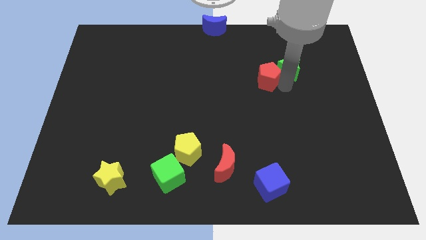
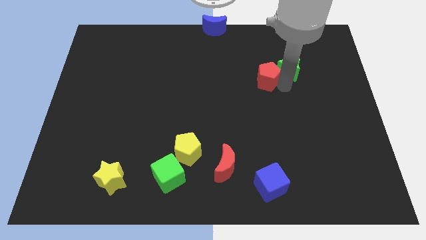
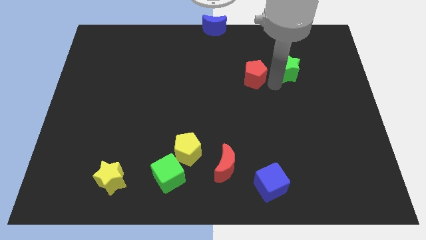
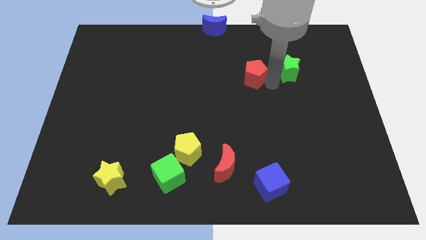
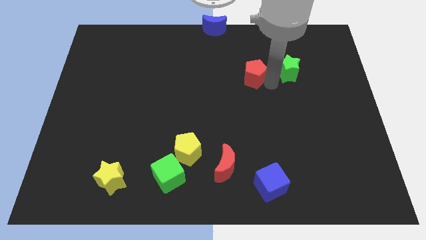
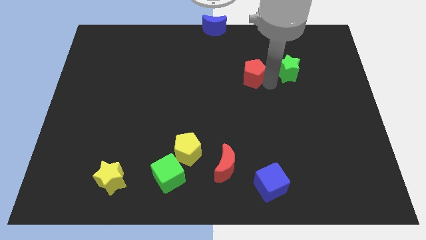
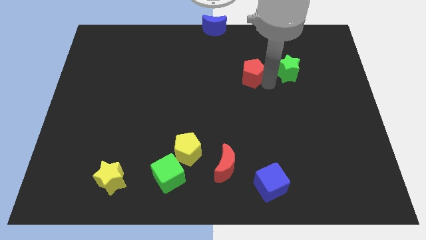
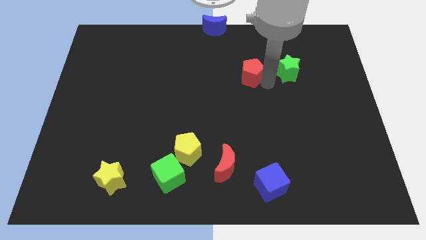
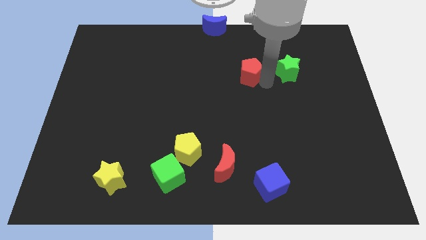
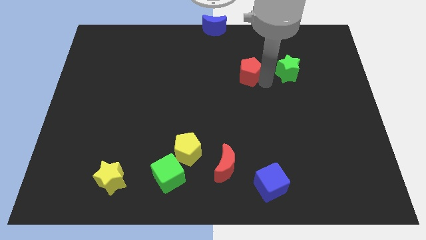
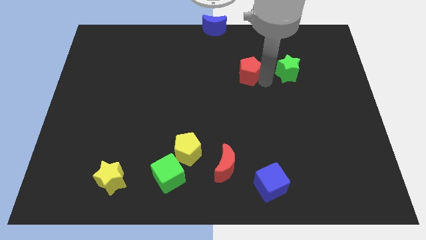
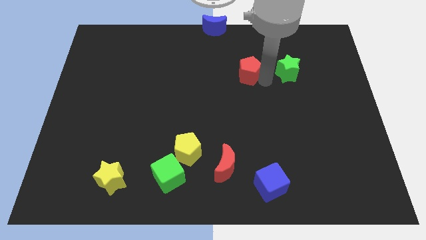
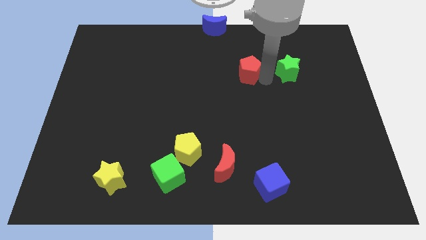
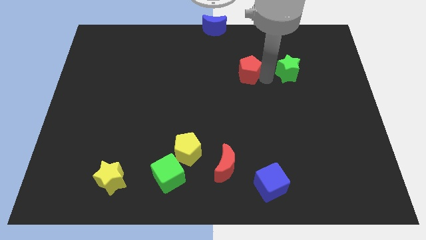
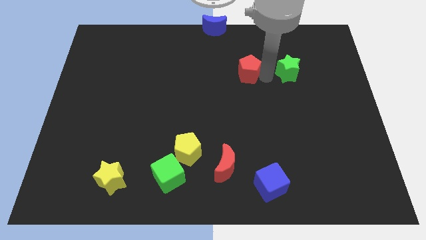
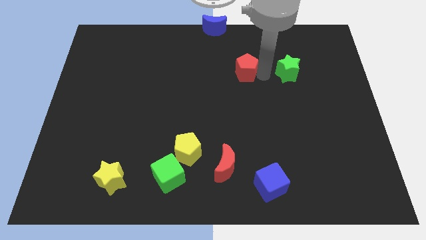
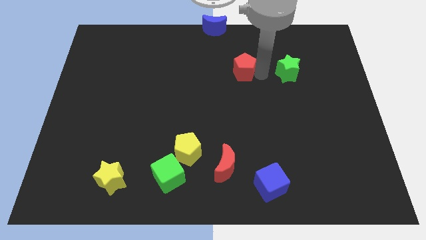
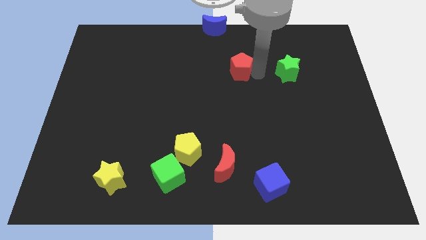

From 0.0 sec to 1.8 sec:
move red pentagon towards center

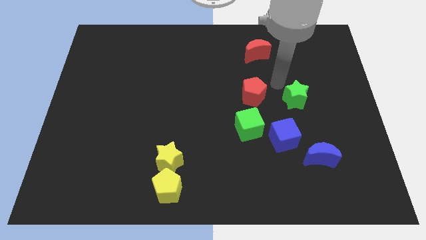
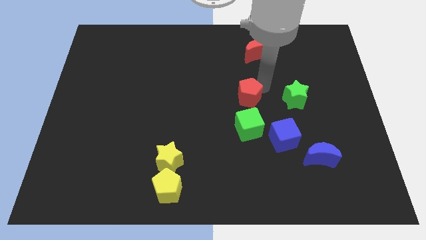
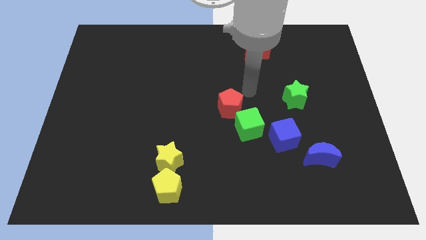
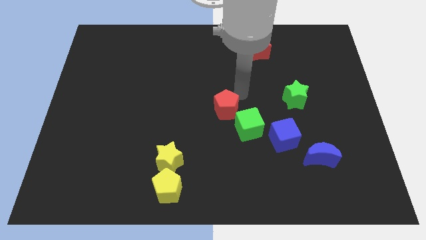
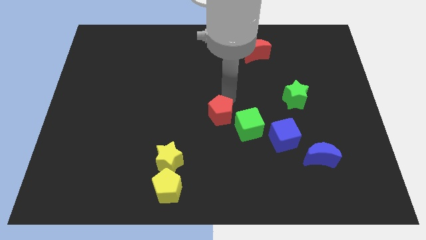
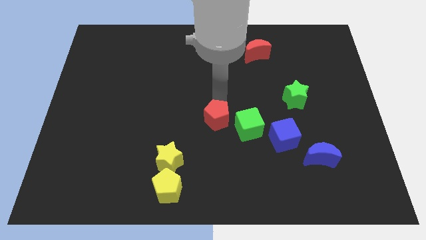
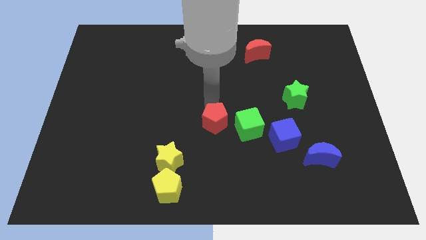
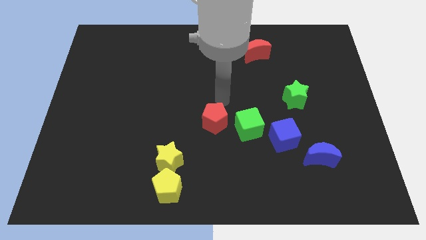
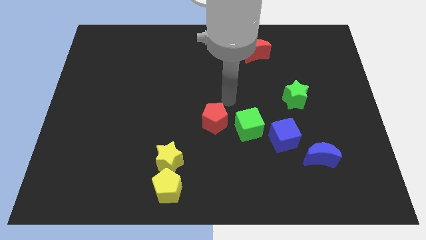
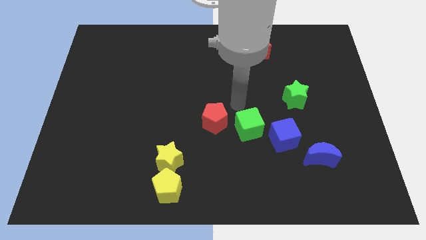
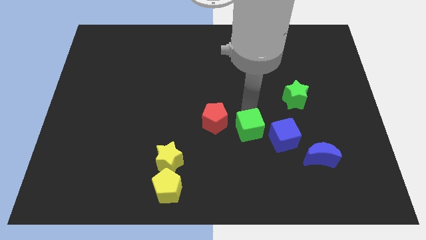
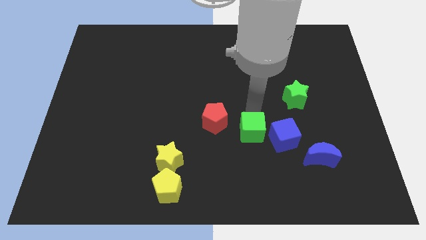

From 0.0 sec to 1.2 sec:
place the red pentagon diagonally top right to the yellow star

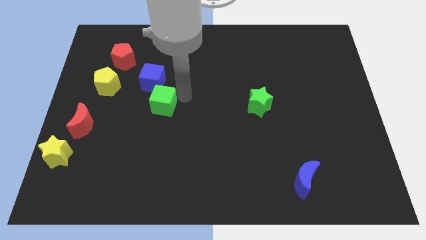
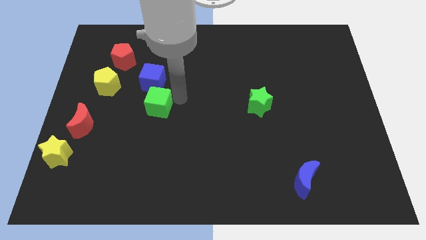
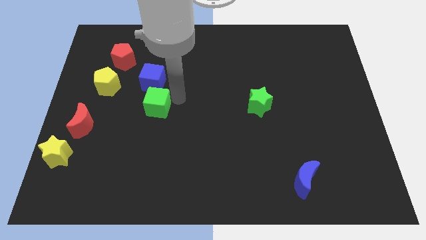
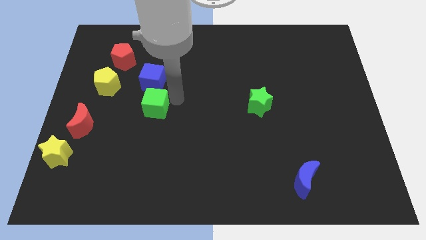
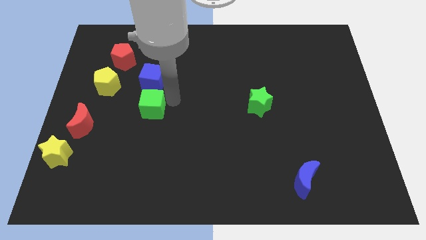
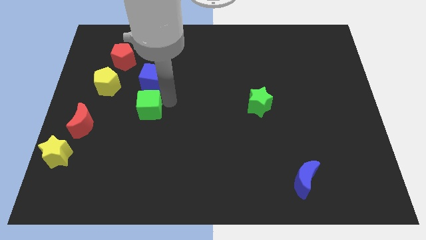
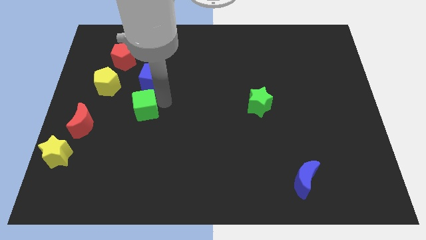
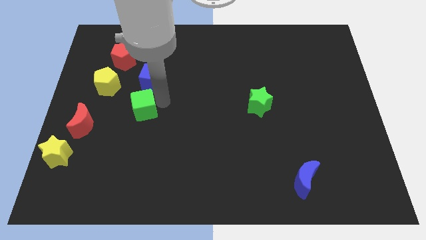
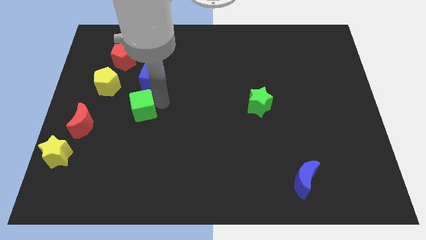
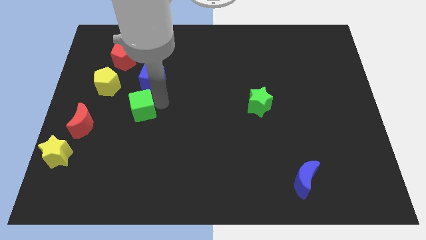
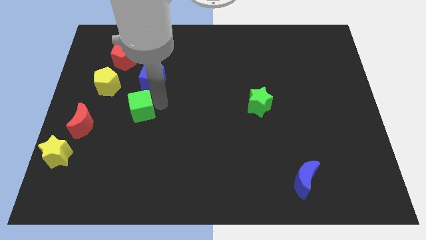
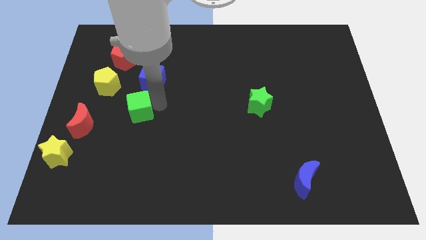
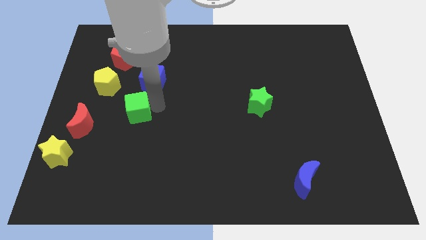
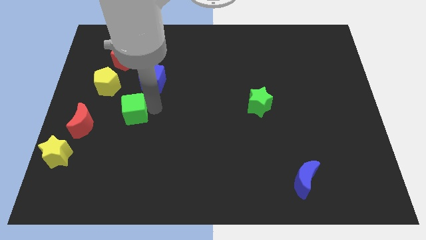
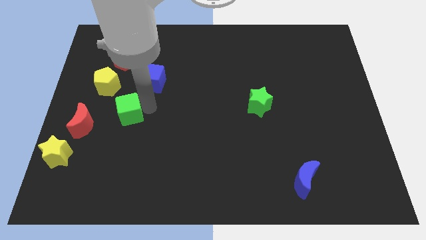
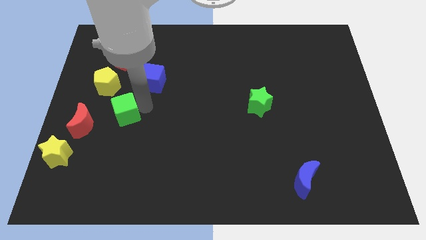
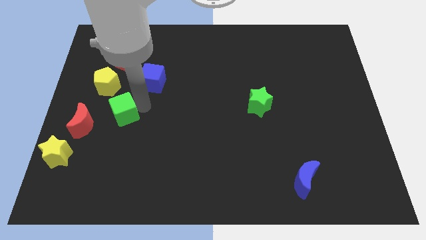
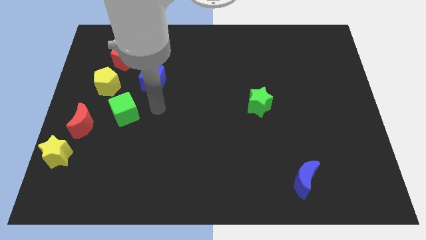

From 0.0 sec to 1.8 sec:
push the green cube diagonally below the bottom right side of the yellow pentagon

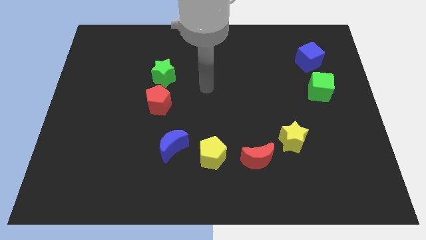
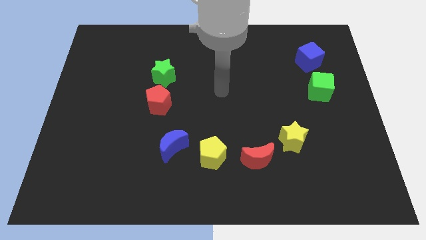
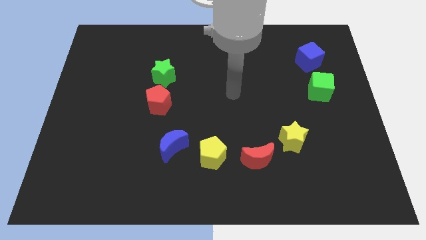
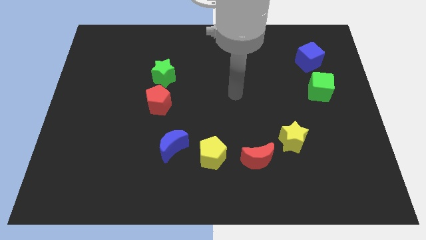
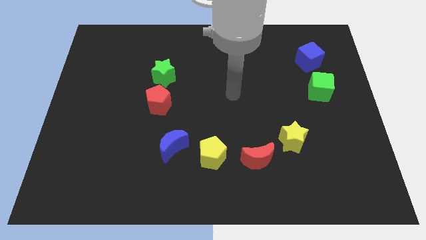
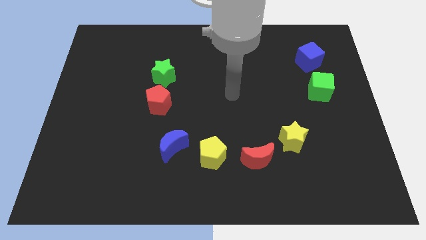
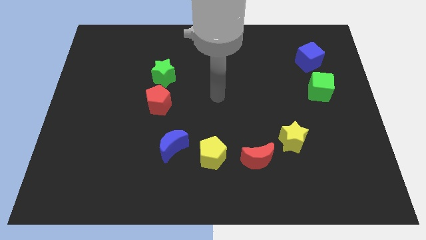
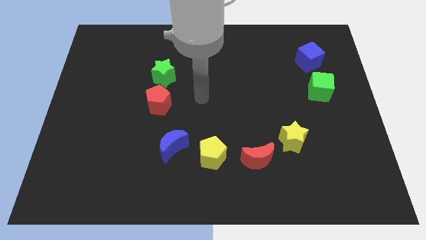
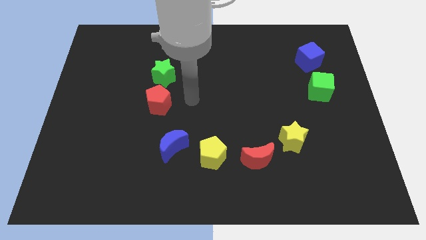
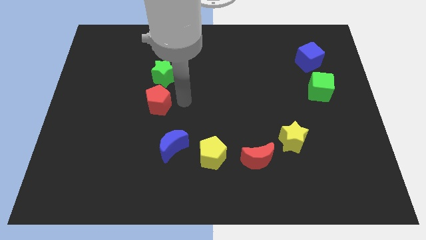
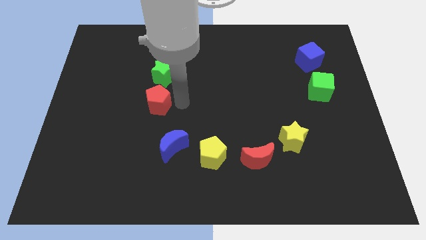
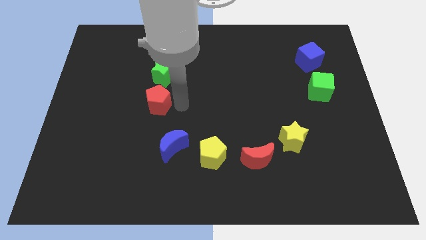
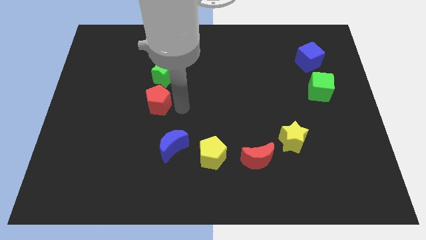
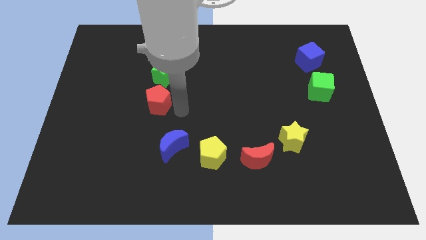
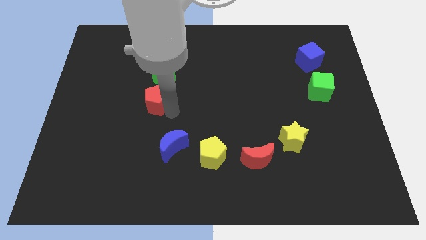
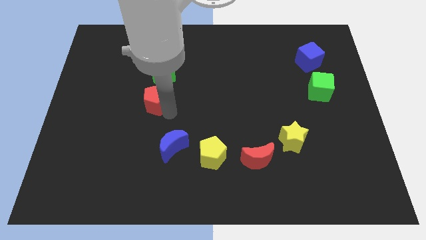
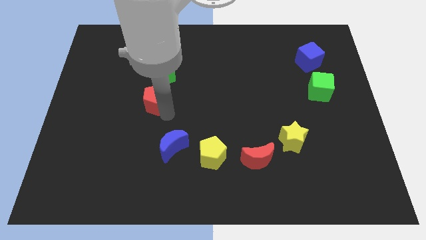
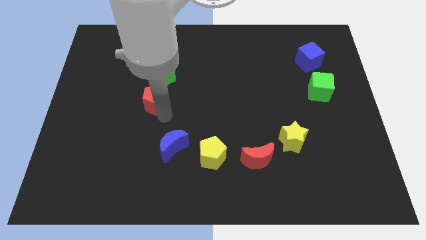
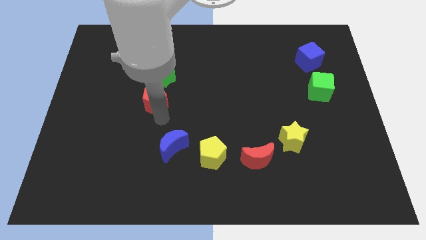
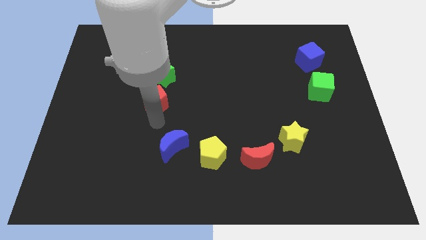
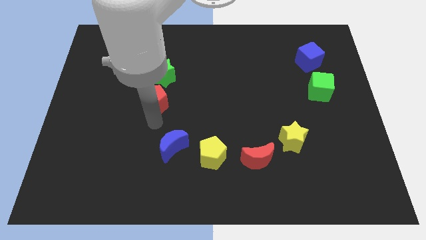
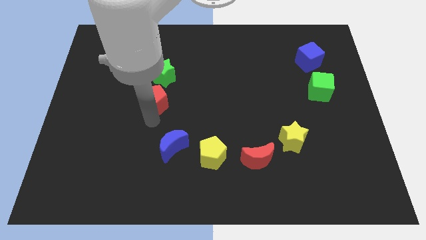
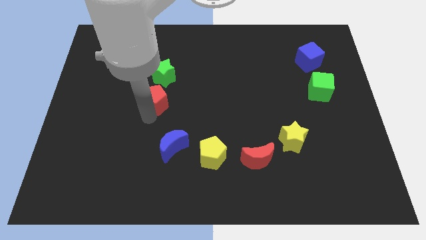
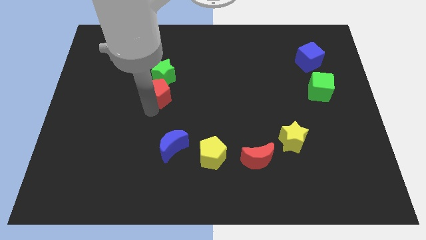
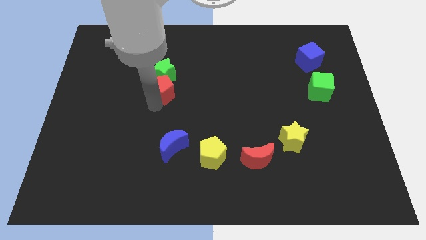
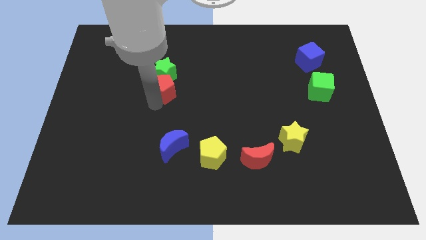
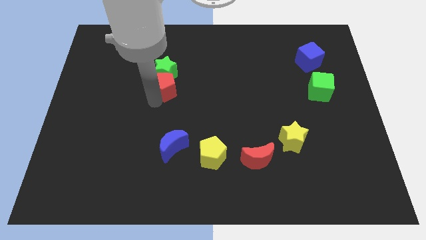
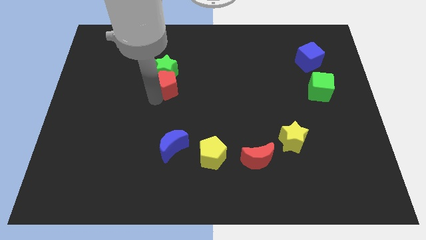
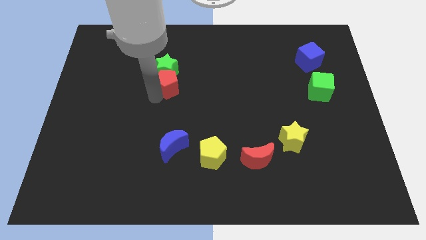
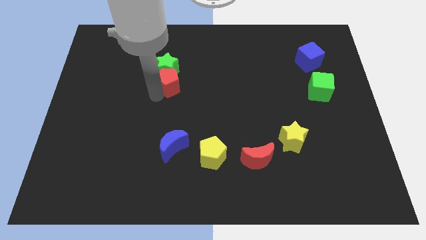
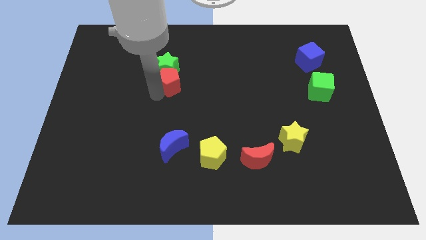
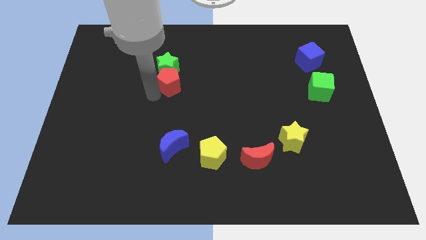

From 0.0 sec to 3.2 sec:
push red pentagon into green star

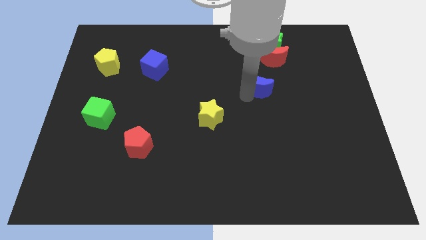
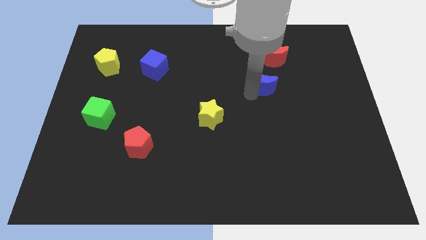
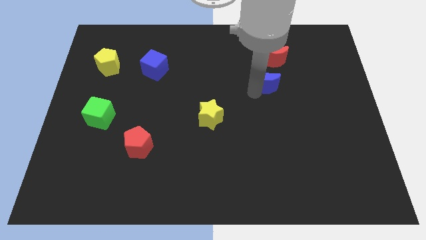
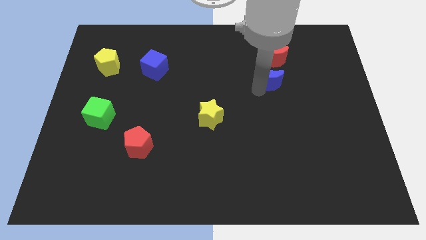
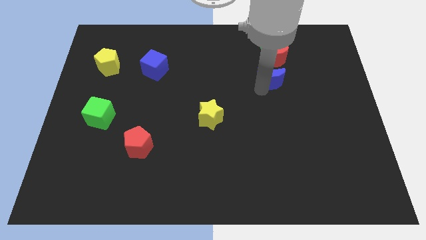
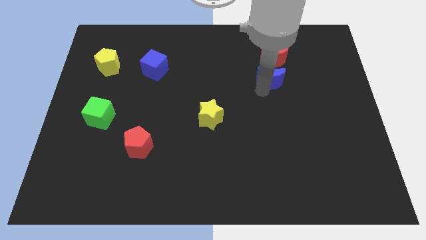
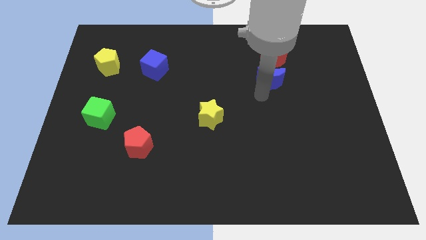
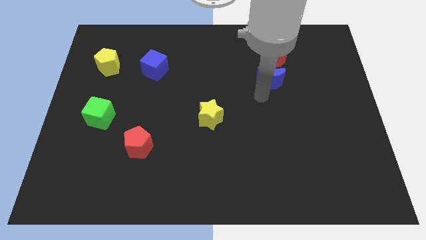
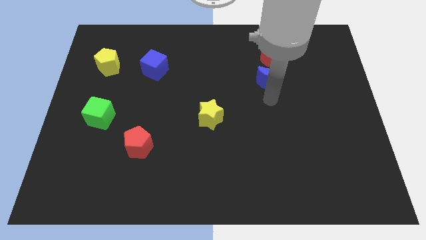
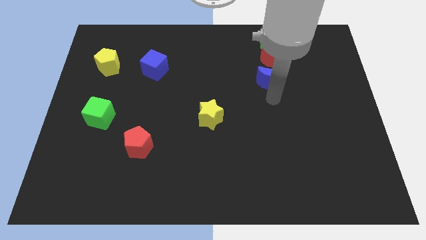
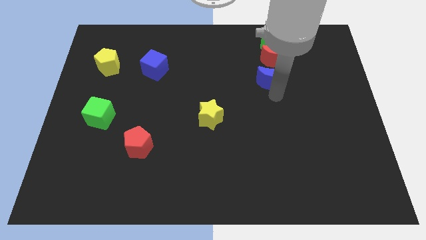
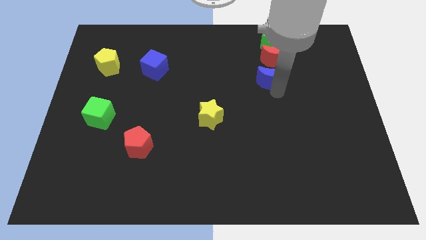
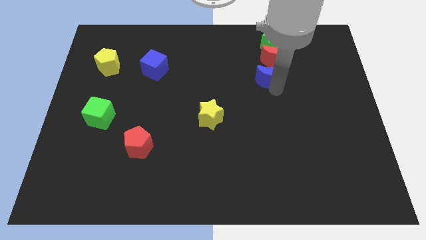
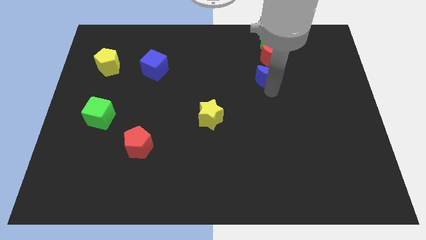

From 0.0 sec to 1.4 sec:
place the blue crescent below the red crescent
